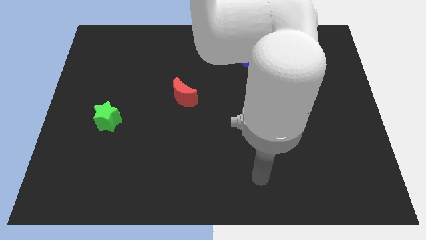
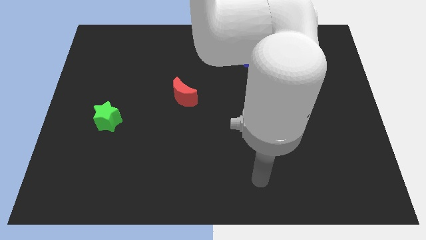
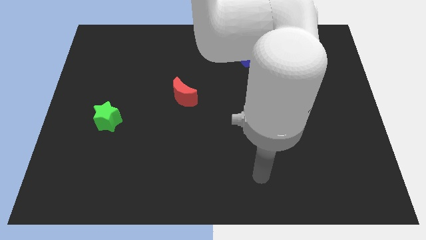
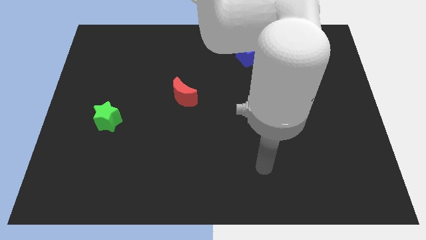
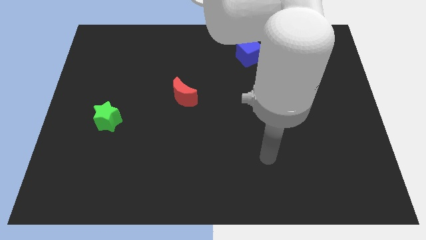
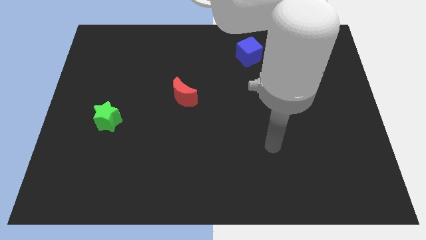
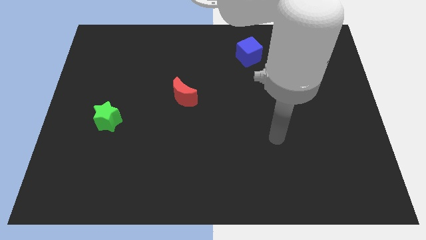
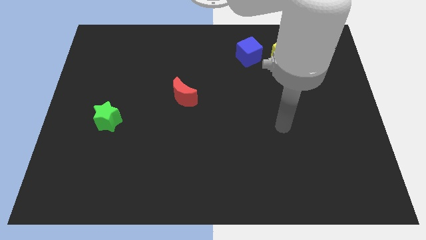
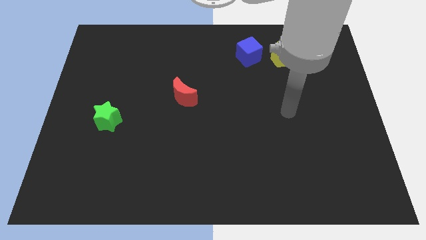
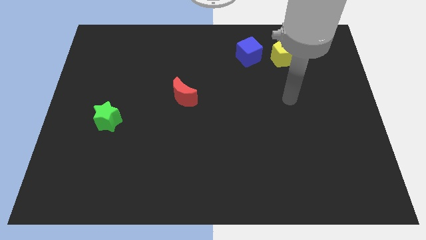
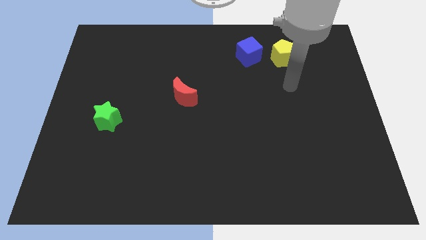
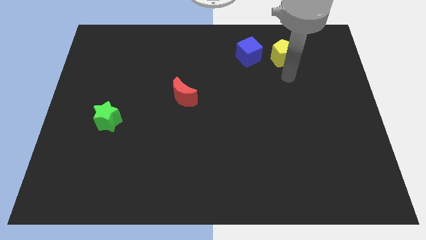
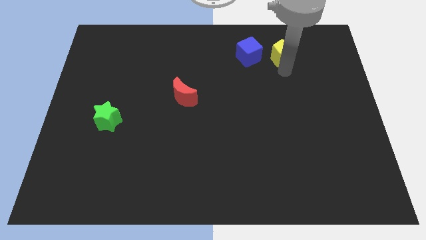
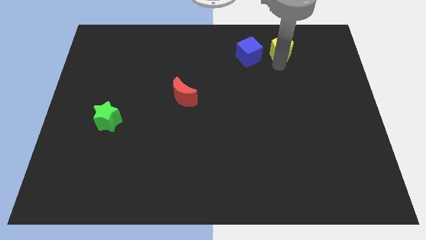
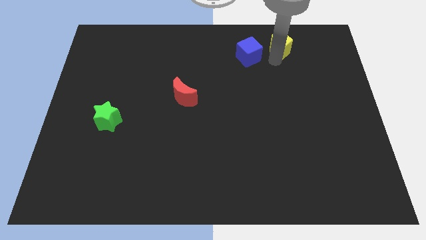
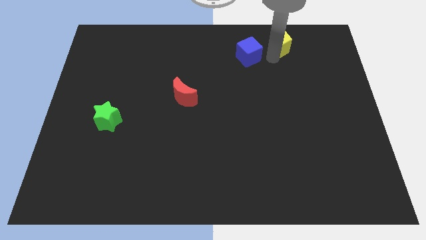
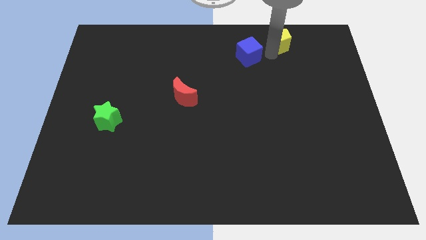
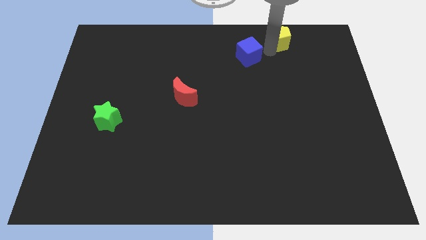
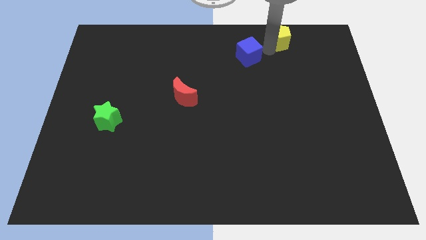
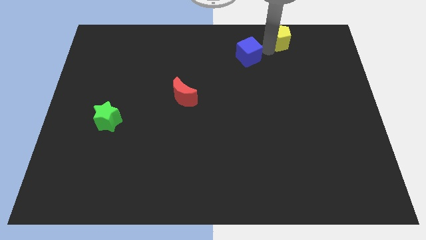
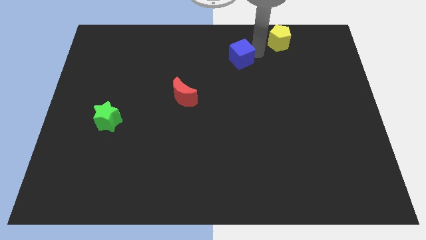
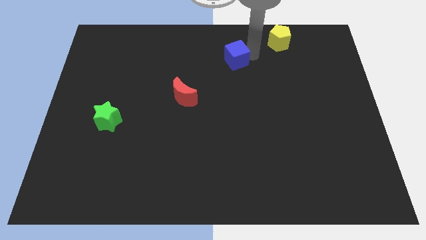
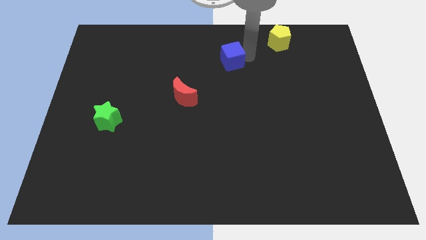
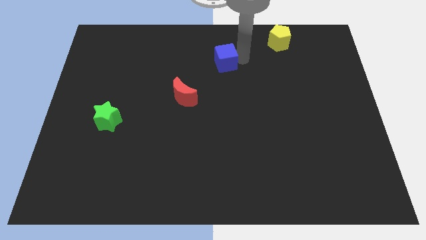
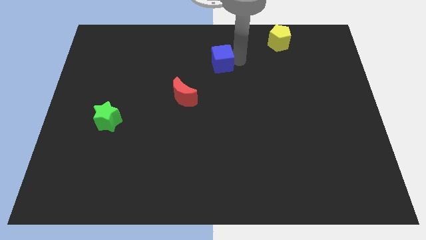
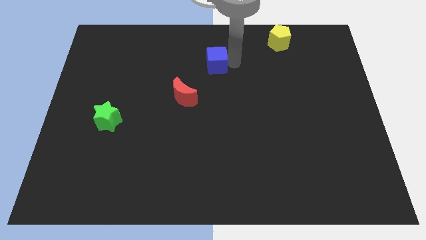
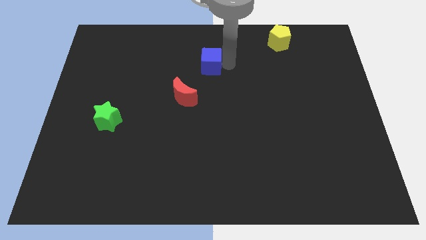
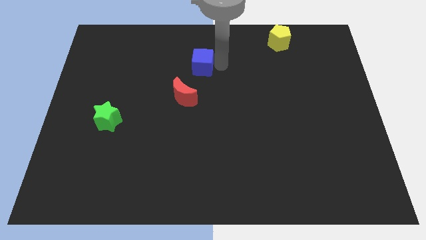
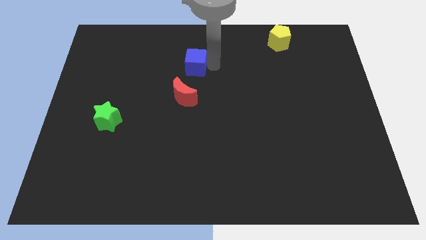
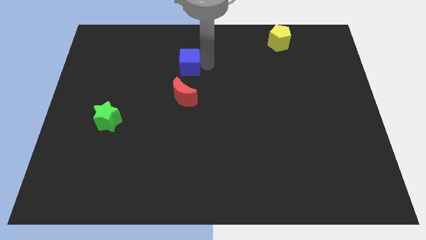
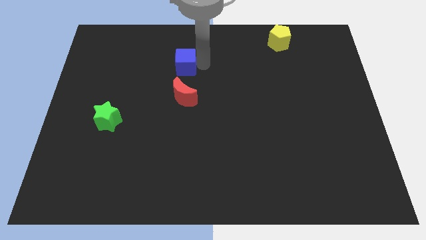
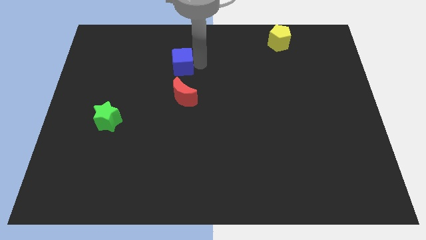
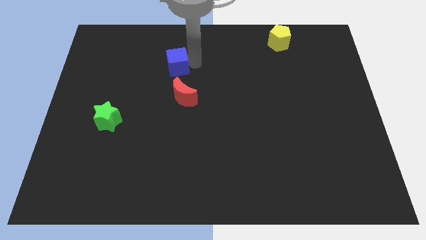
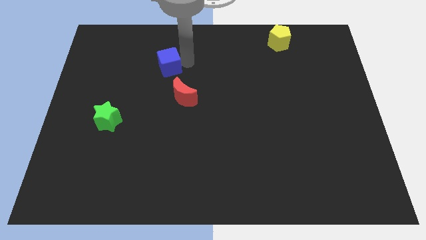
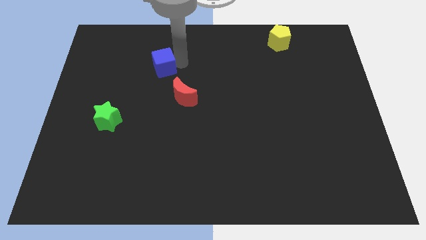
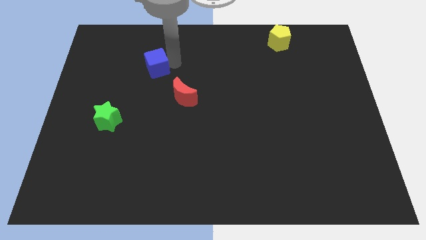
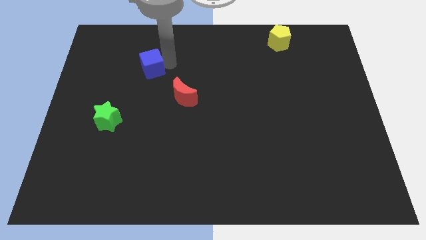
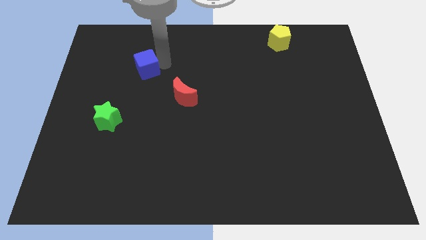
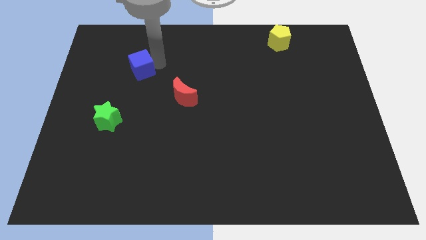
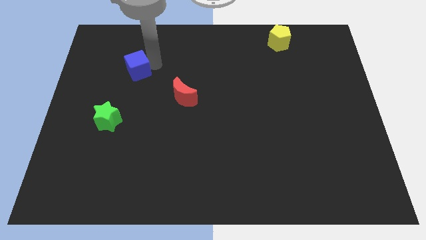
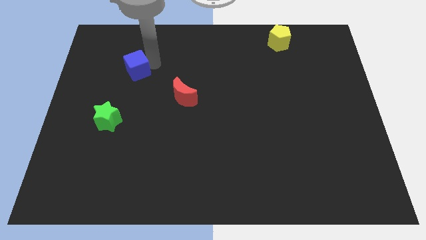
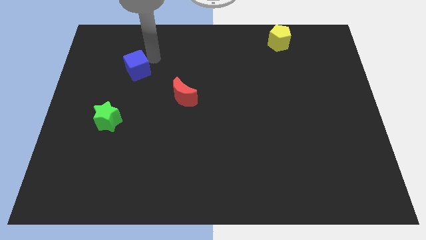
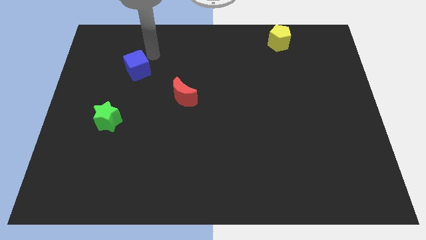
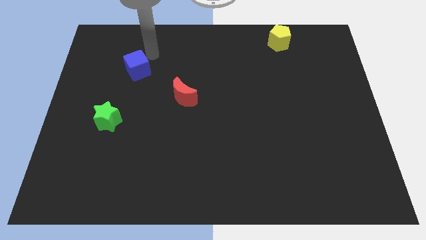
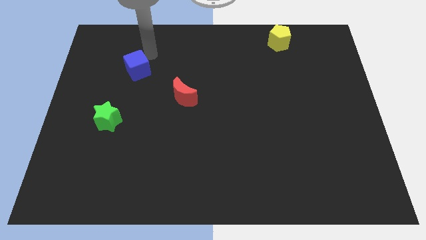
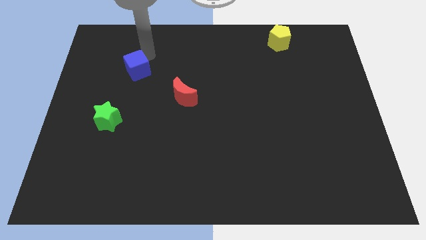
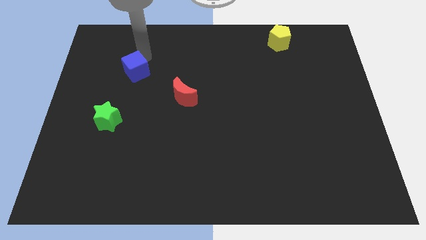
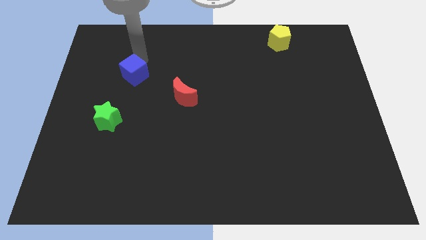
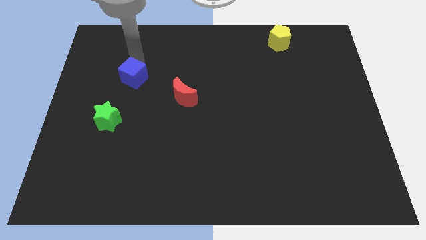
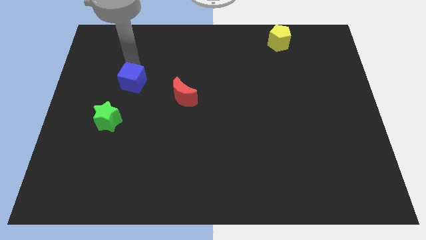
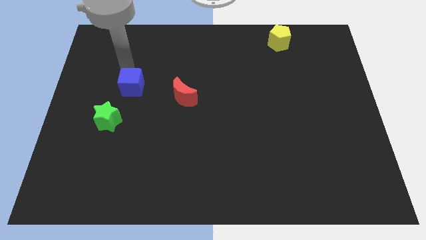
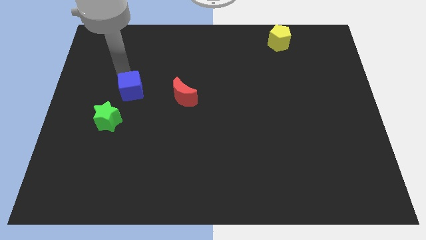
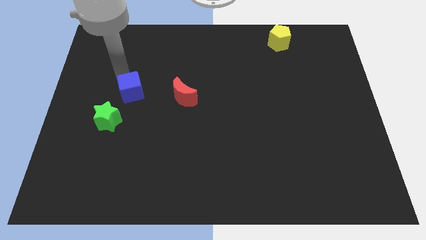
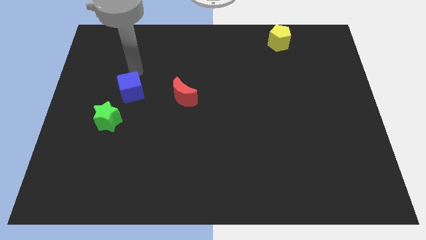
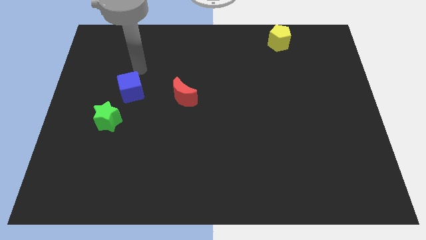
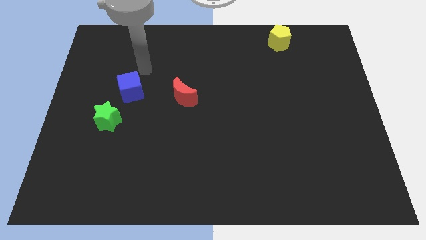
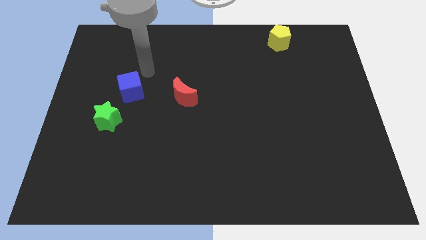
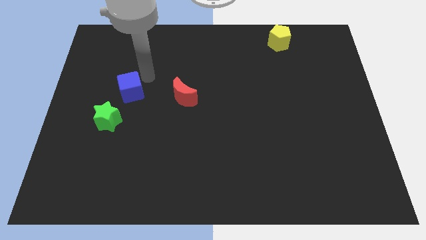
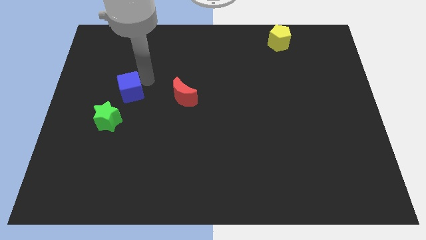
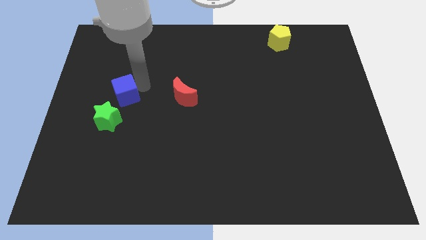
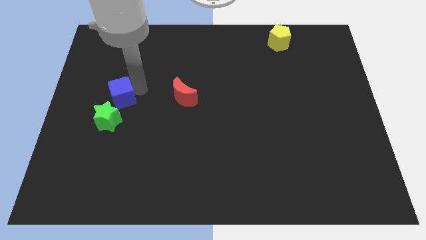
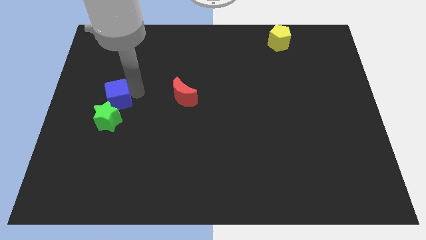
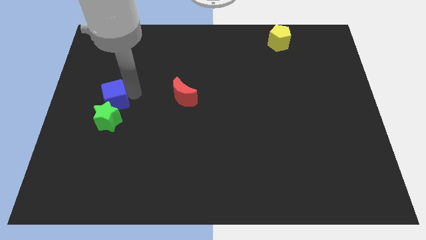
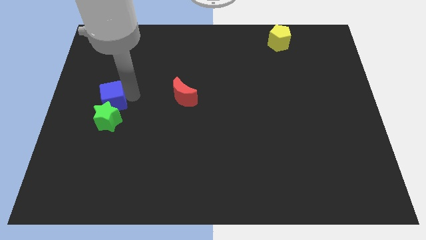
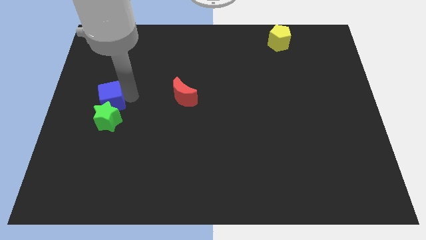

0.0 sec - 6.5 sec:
slide the blue block towards the green block

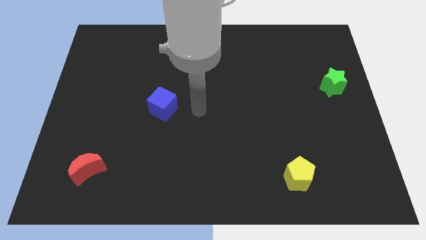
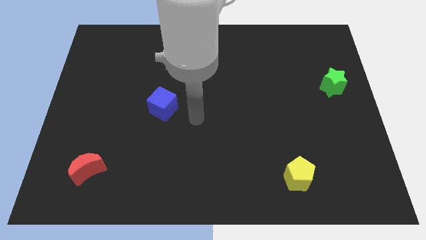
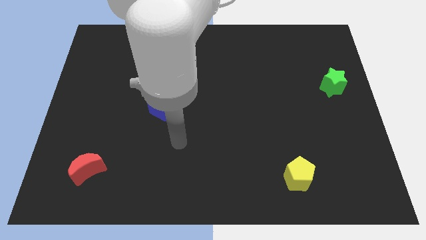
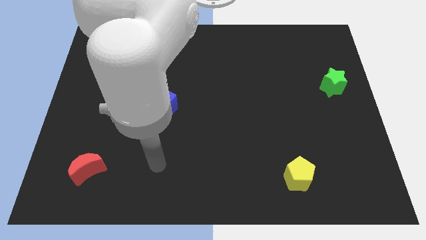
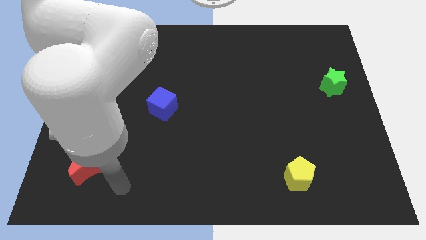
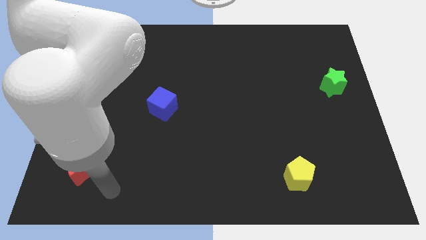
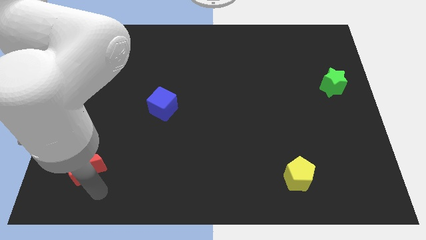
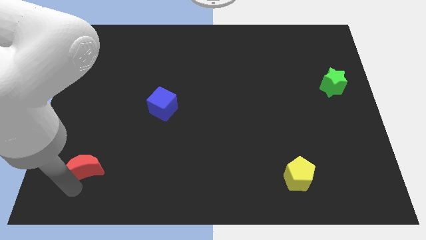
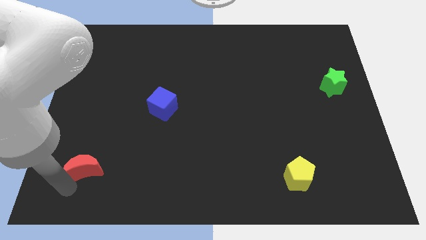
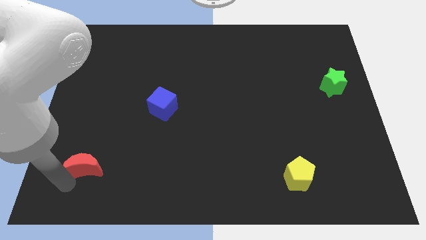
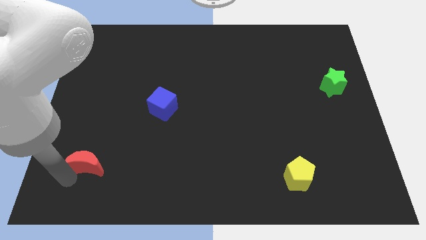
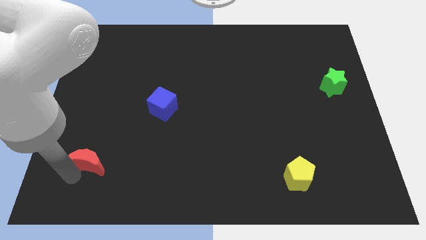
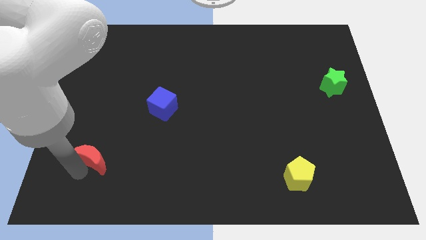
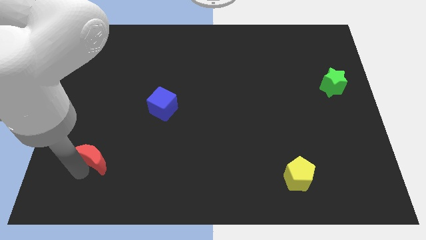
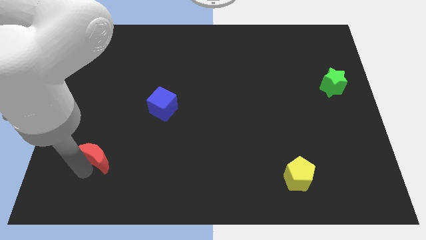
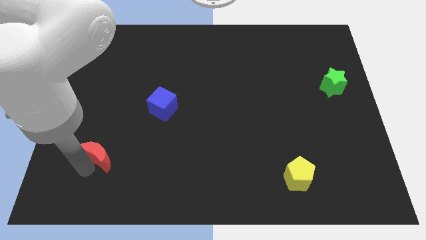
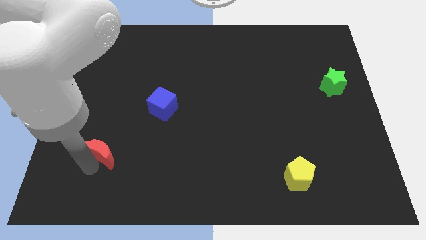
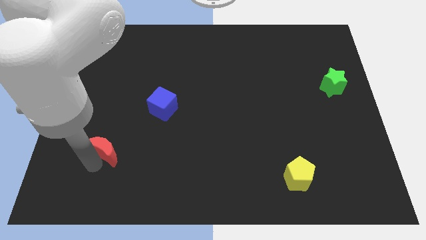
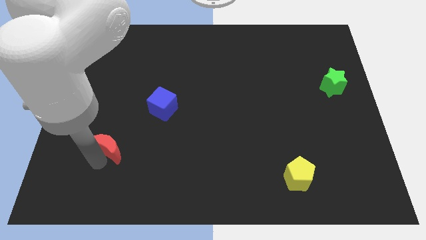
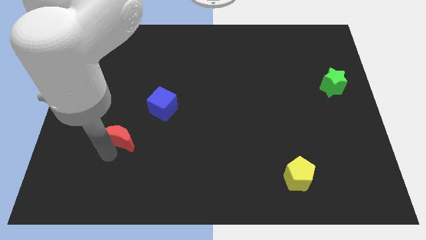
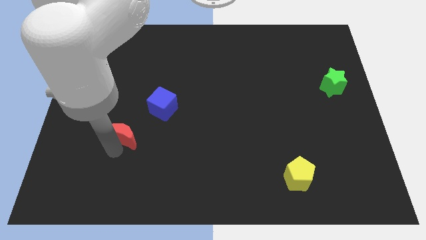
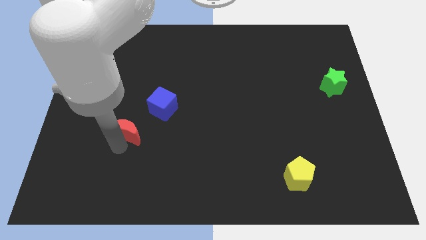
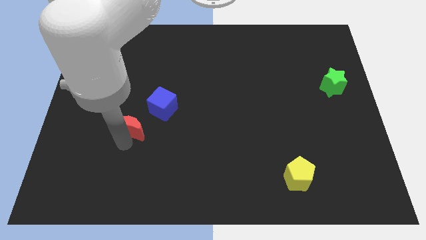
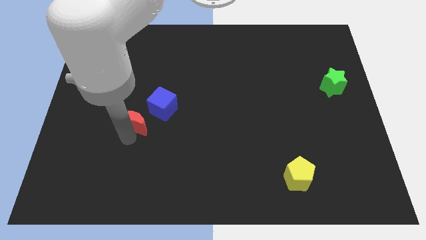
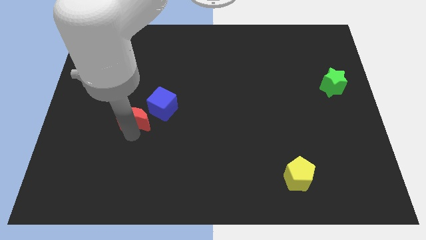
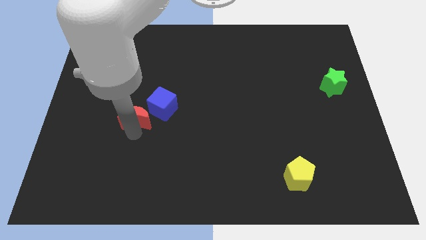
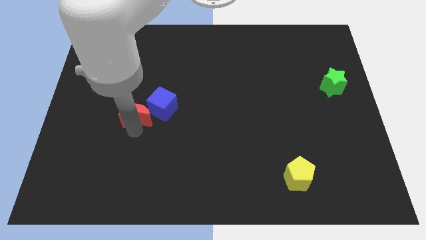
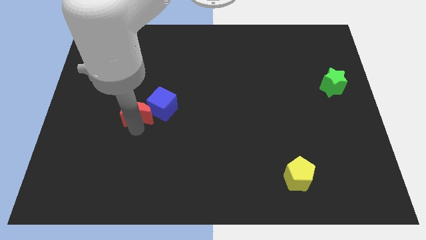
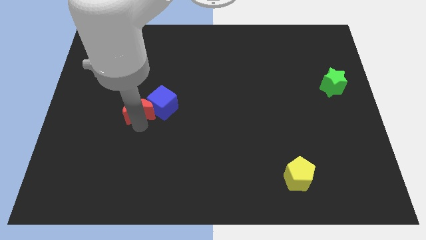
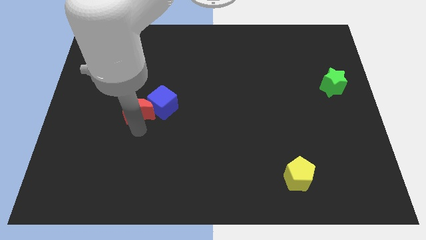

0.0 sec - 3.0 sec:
put the red block next to the blue cube
